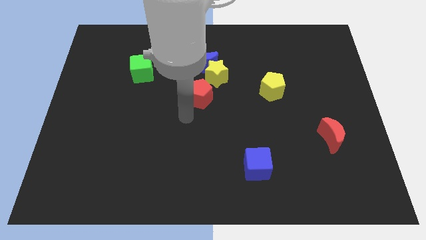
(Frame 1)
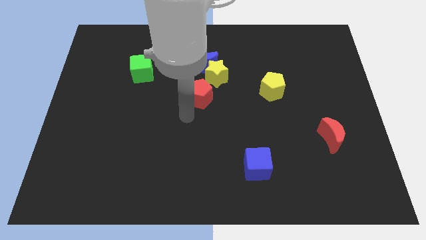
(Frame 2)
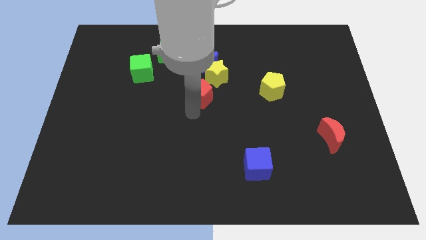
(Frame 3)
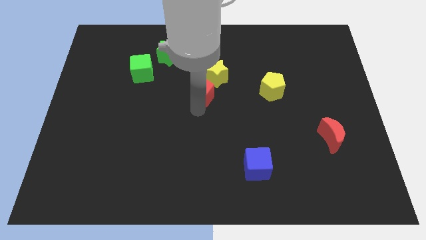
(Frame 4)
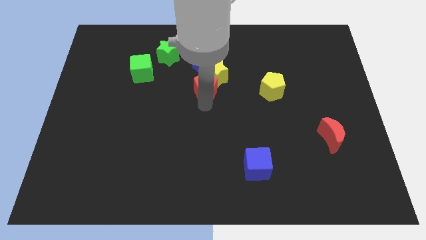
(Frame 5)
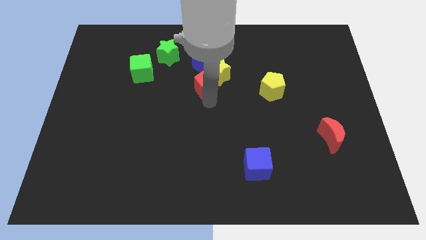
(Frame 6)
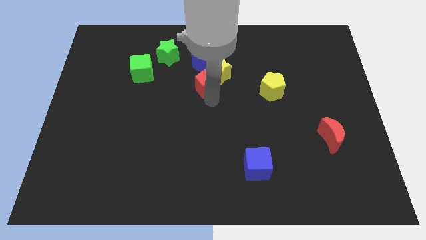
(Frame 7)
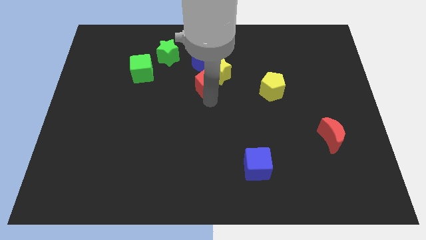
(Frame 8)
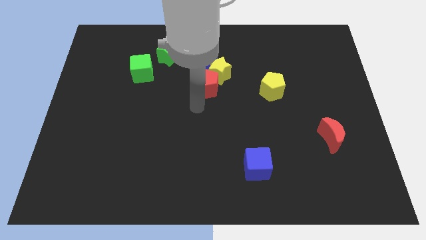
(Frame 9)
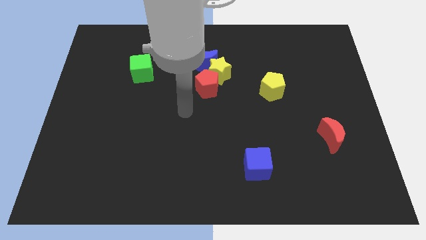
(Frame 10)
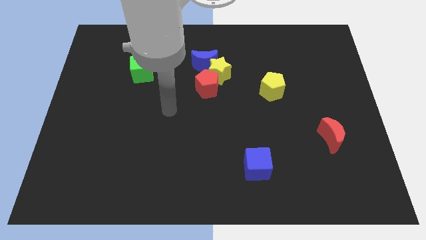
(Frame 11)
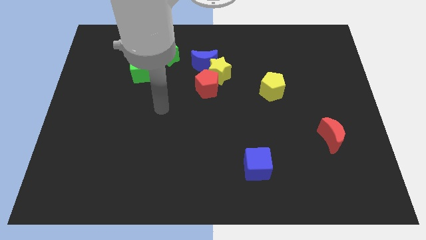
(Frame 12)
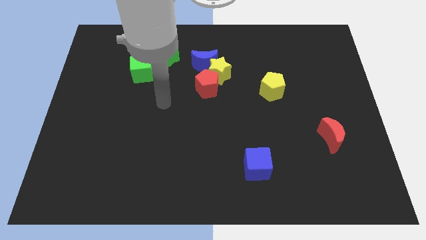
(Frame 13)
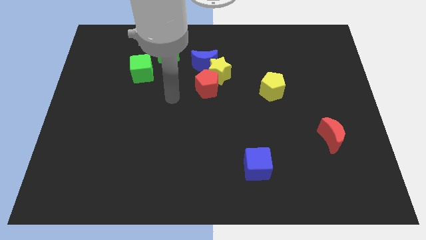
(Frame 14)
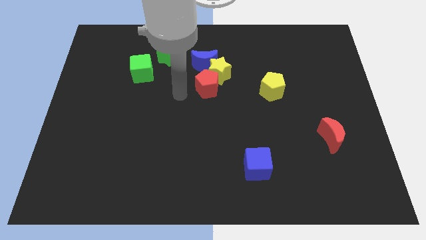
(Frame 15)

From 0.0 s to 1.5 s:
push the red pentagon into yellow star

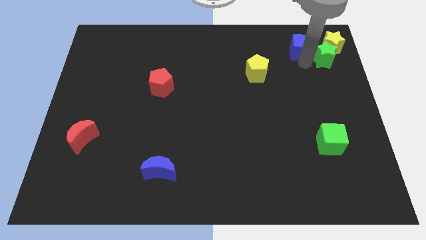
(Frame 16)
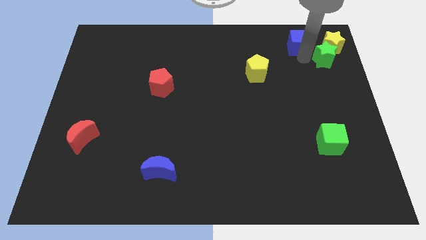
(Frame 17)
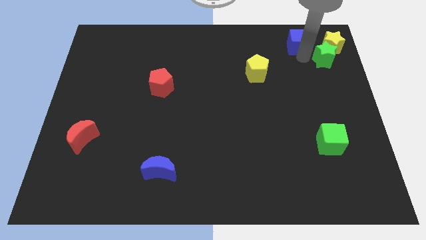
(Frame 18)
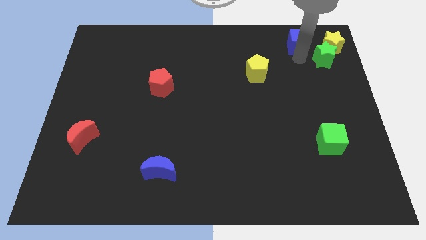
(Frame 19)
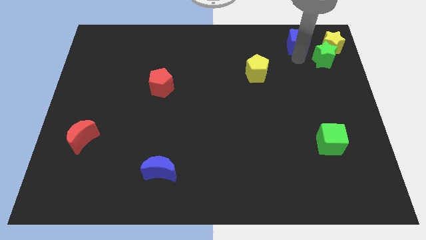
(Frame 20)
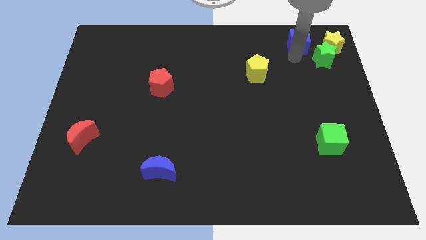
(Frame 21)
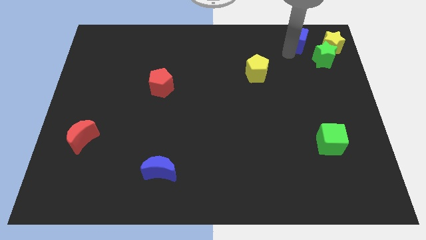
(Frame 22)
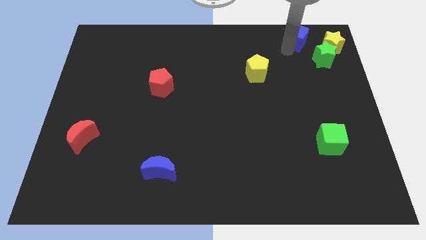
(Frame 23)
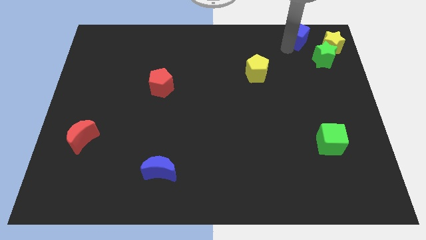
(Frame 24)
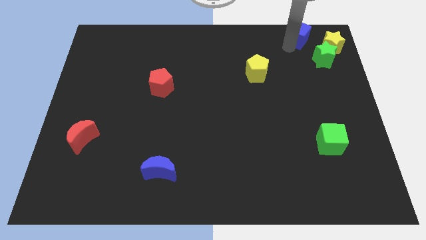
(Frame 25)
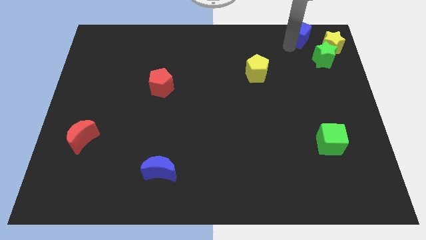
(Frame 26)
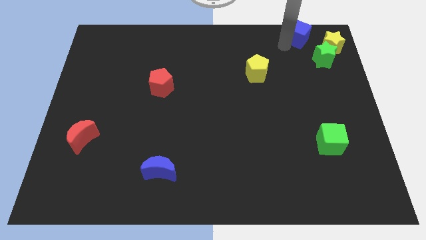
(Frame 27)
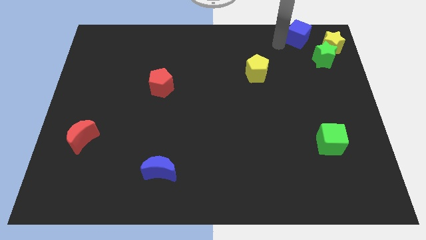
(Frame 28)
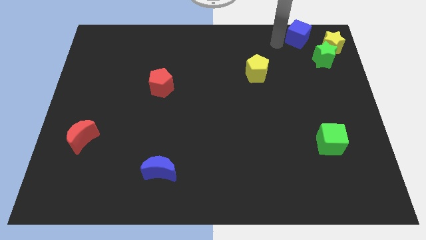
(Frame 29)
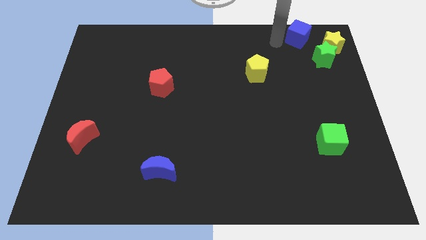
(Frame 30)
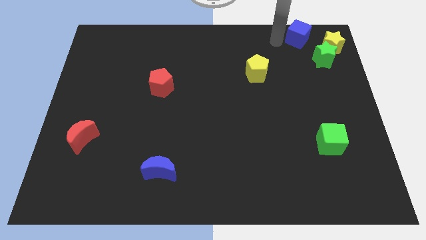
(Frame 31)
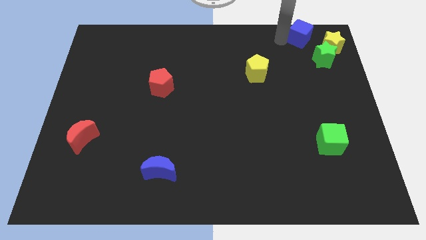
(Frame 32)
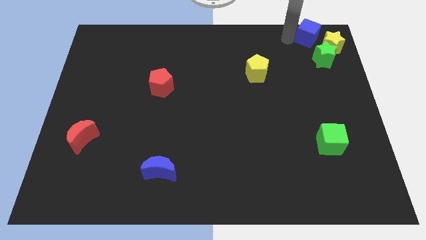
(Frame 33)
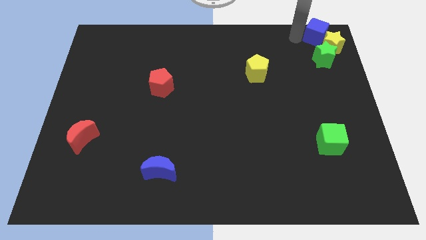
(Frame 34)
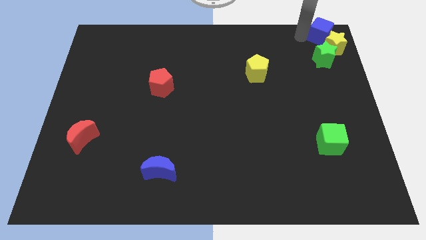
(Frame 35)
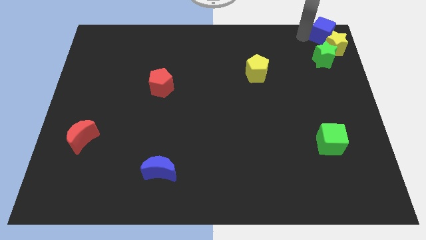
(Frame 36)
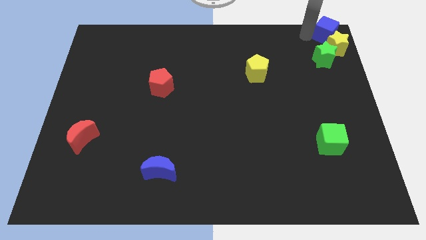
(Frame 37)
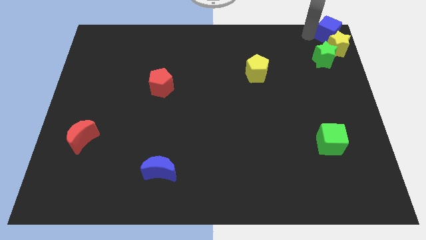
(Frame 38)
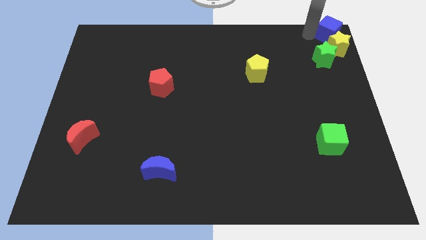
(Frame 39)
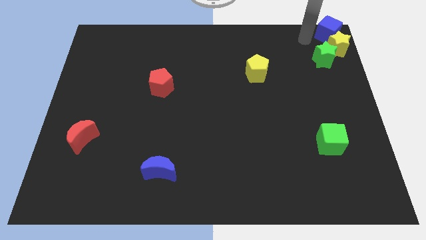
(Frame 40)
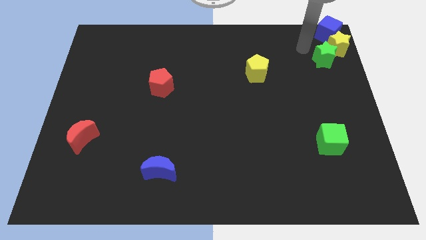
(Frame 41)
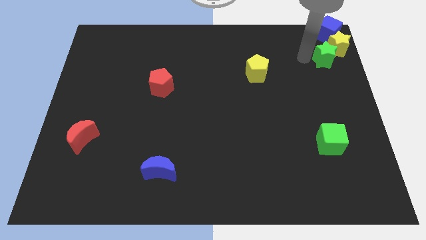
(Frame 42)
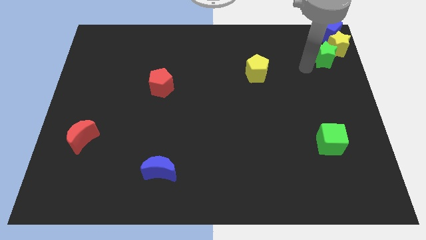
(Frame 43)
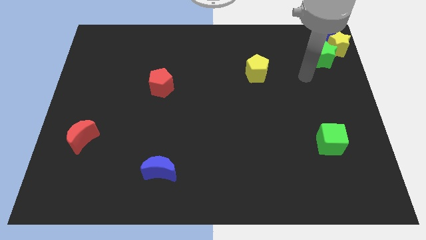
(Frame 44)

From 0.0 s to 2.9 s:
push the blue cube into the yellow star

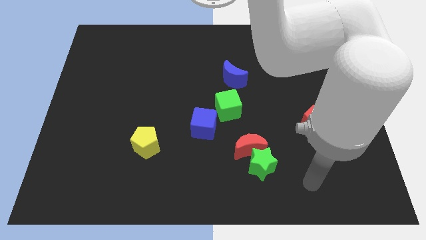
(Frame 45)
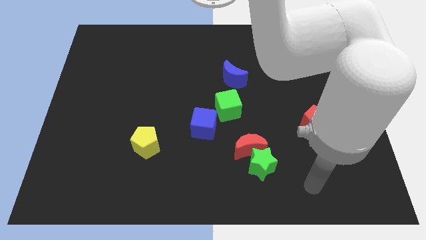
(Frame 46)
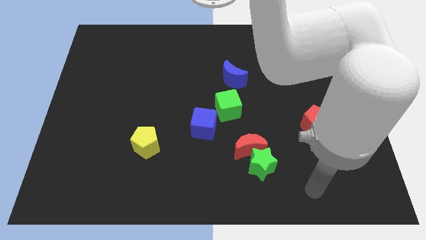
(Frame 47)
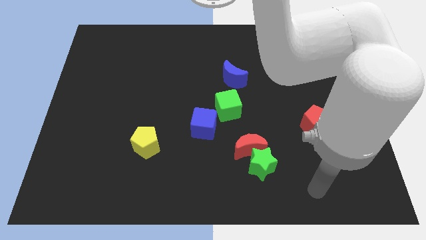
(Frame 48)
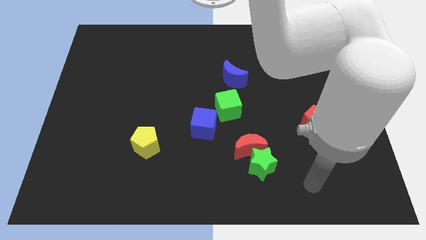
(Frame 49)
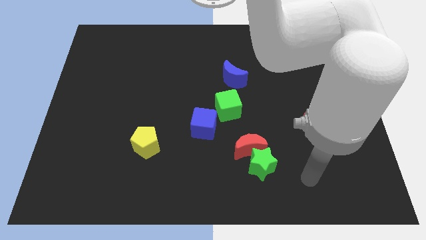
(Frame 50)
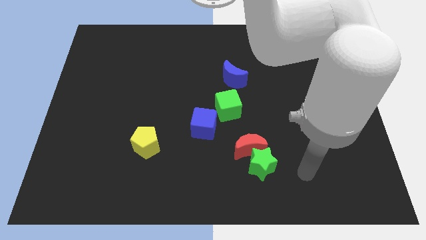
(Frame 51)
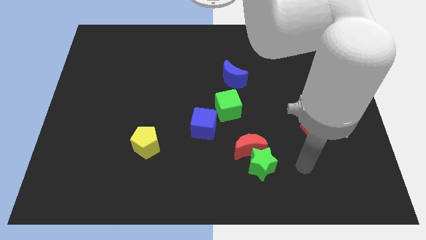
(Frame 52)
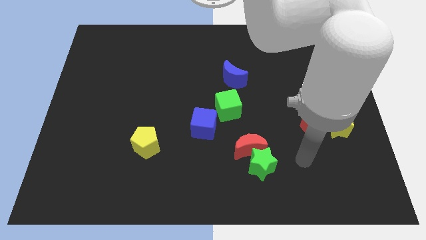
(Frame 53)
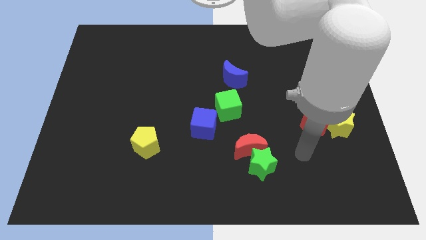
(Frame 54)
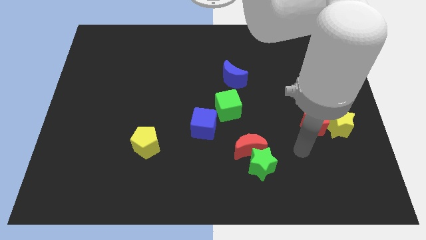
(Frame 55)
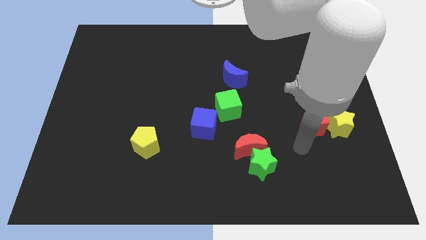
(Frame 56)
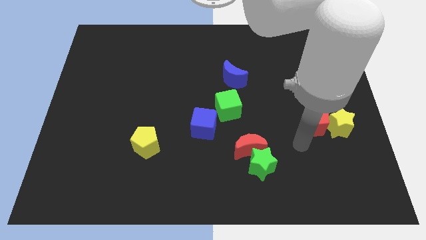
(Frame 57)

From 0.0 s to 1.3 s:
move your hand slightly up

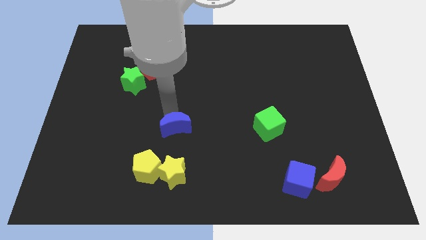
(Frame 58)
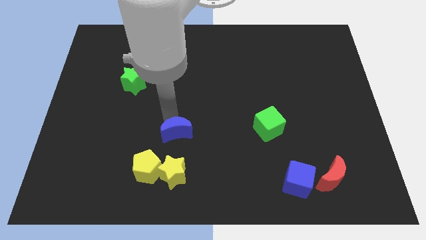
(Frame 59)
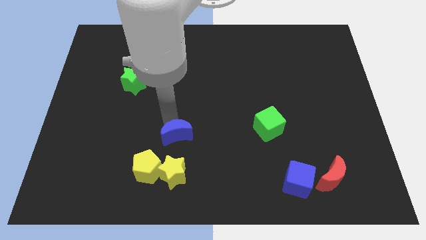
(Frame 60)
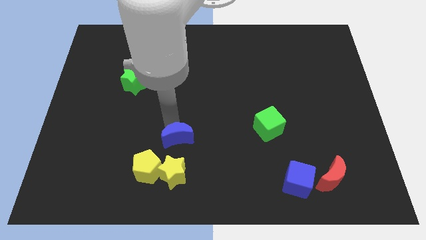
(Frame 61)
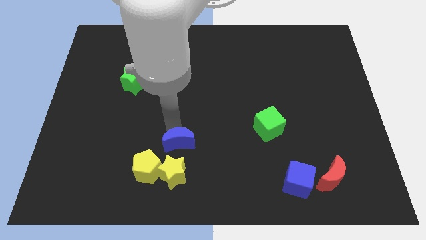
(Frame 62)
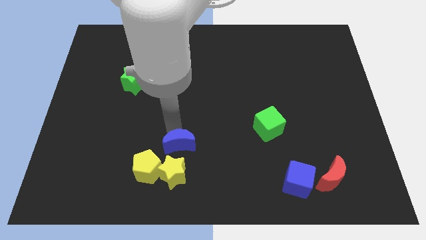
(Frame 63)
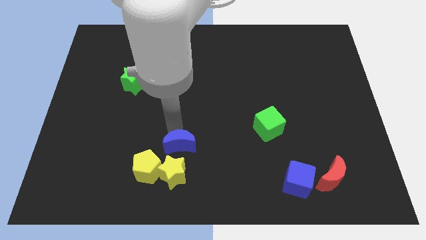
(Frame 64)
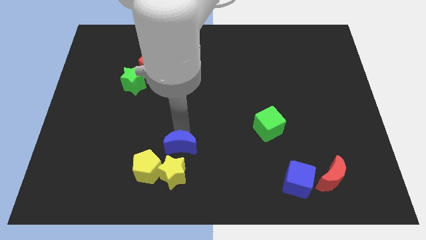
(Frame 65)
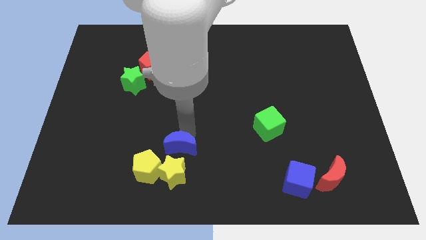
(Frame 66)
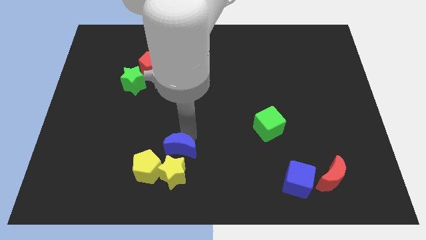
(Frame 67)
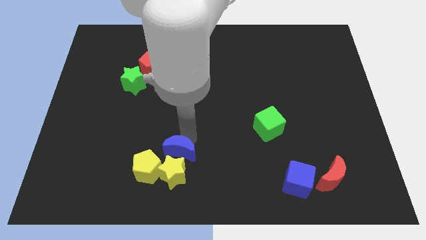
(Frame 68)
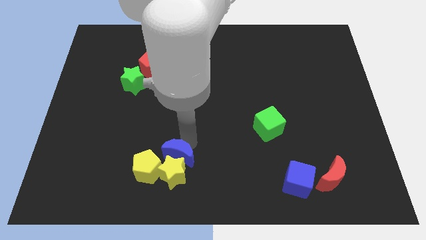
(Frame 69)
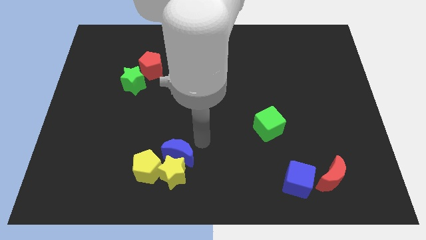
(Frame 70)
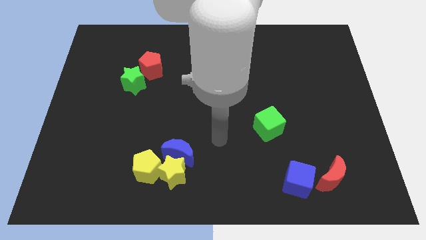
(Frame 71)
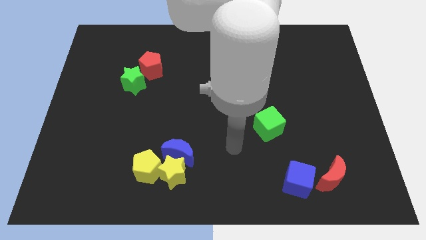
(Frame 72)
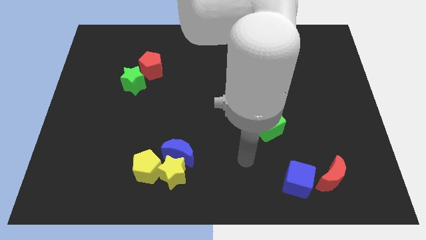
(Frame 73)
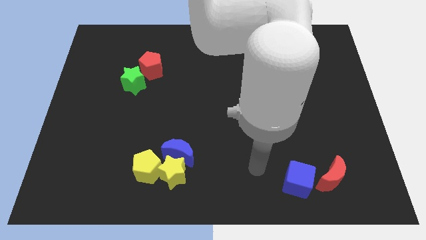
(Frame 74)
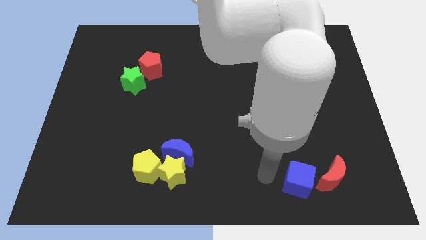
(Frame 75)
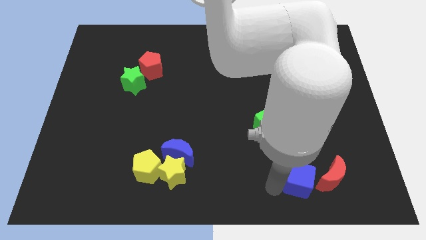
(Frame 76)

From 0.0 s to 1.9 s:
move the blue moon close to the yellow star

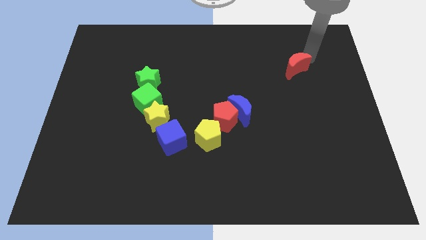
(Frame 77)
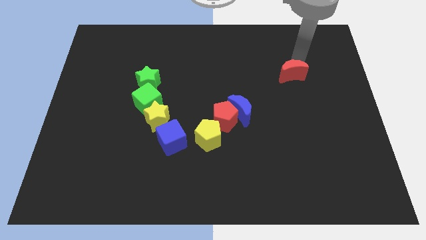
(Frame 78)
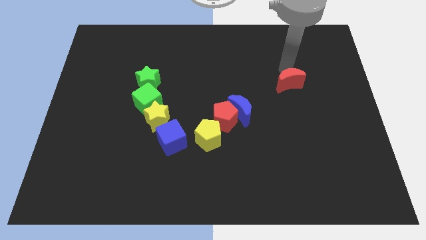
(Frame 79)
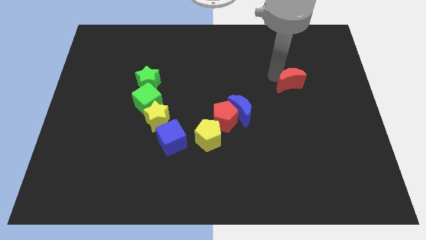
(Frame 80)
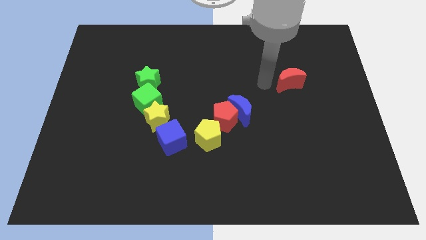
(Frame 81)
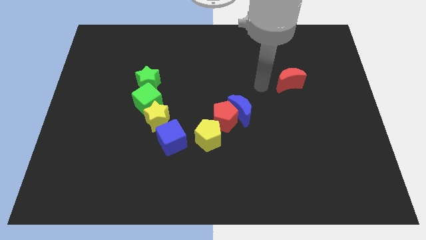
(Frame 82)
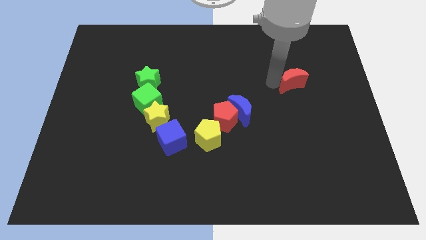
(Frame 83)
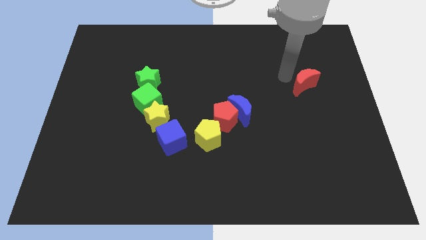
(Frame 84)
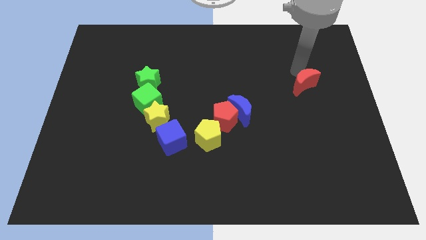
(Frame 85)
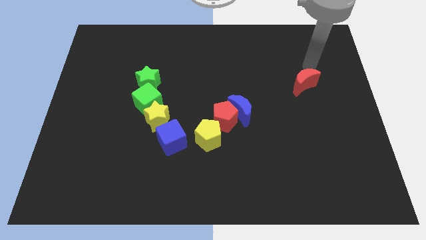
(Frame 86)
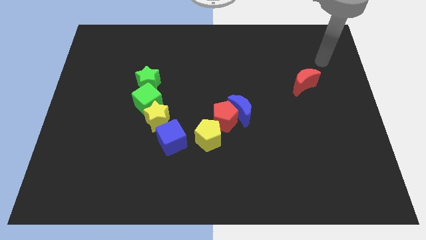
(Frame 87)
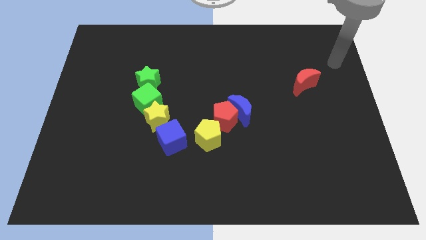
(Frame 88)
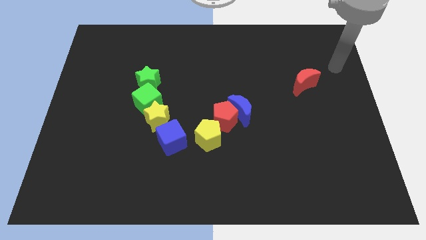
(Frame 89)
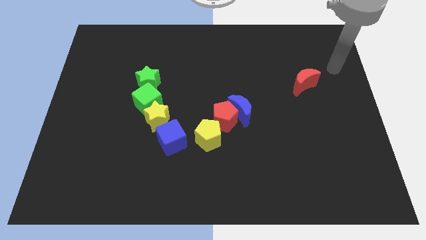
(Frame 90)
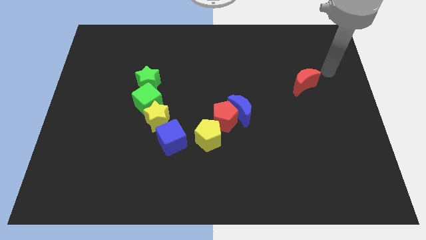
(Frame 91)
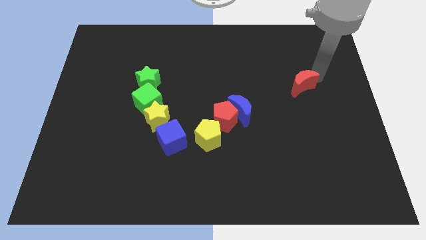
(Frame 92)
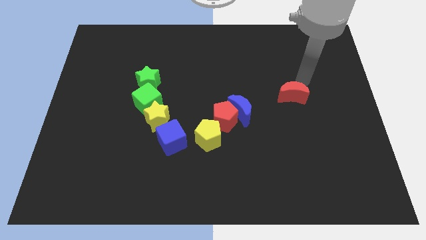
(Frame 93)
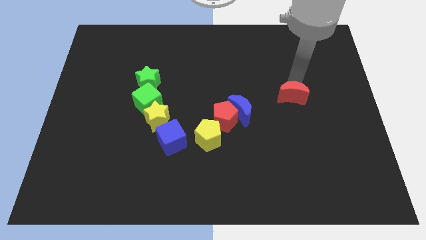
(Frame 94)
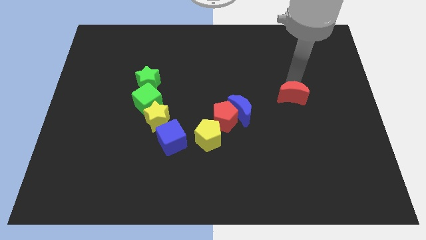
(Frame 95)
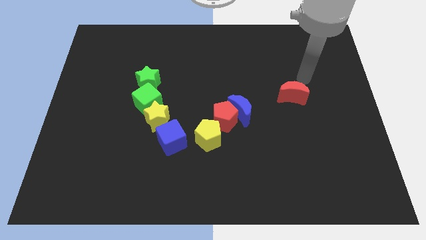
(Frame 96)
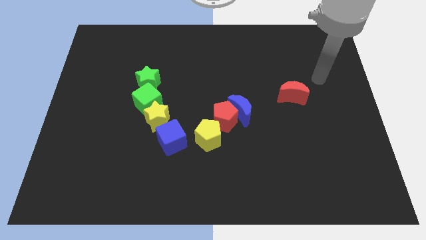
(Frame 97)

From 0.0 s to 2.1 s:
move the red crescent towards the center right of the board
